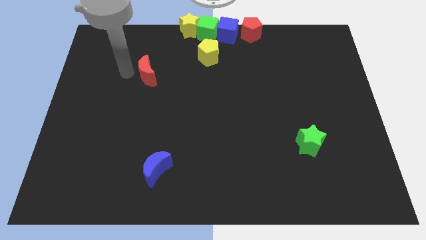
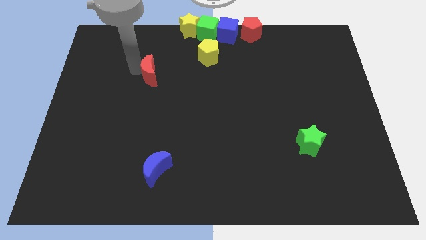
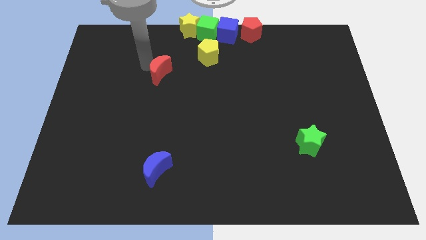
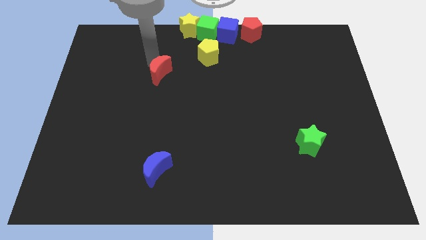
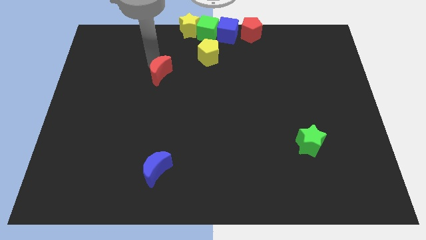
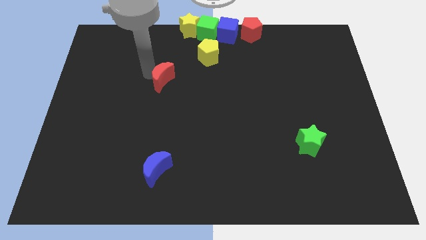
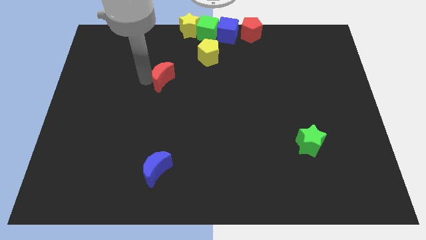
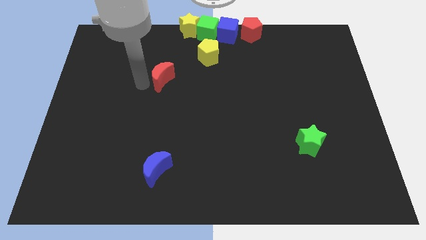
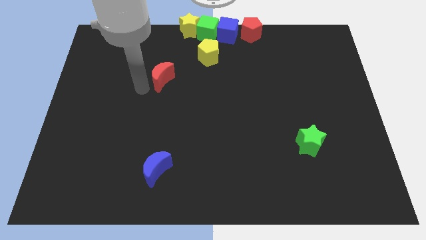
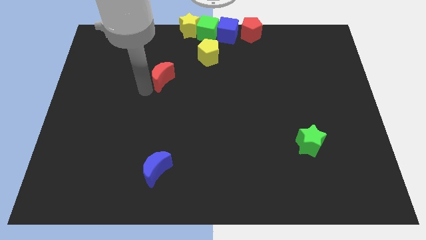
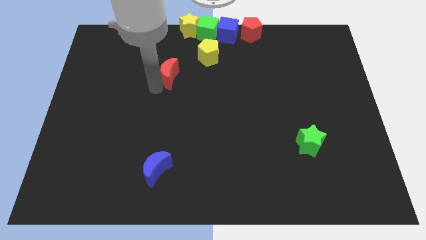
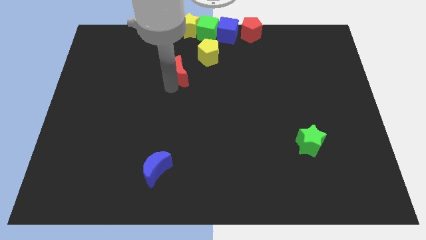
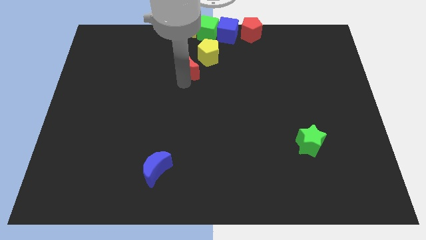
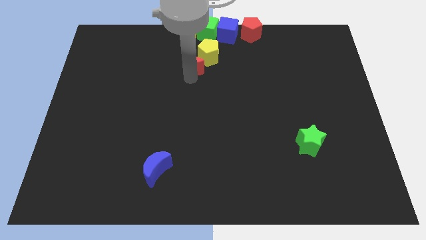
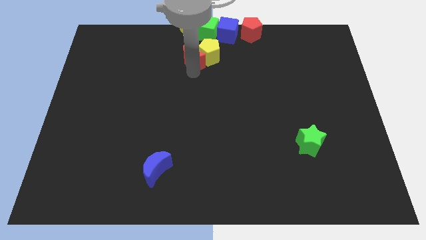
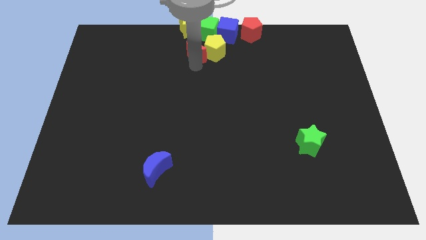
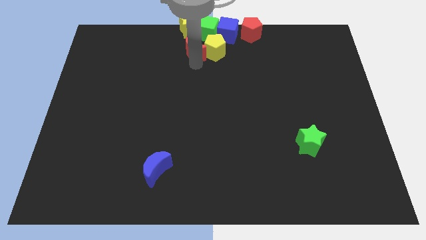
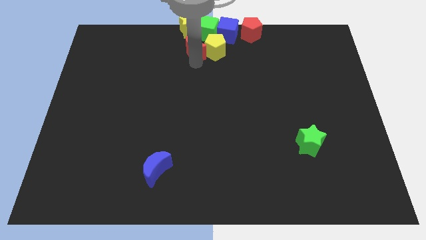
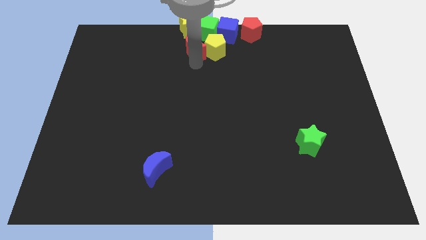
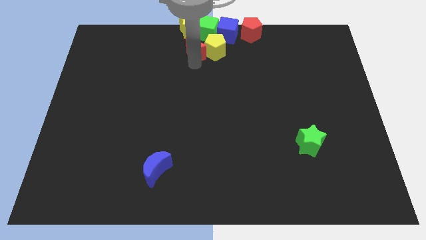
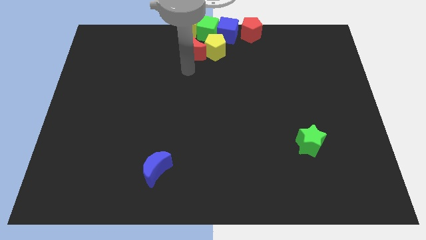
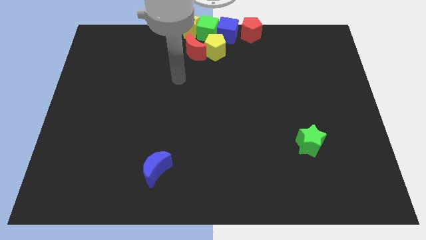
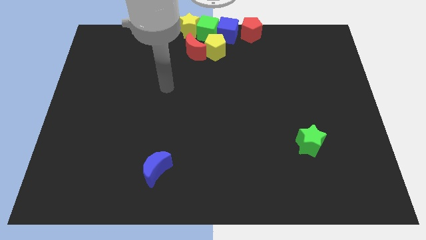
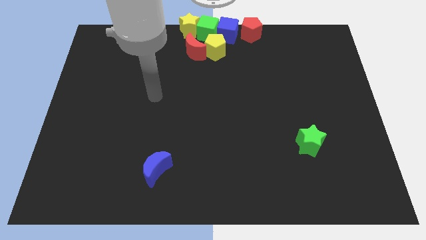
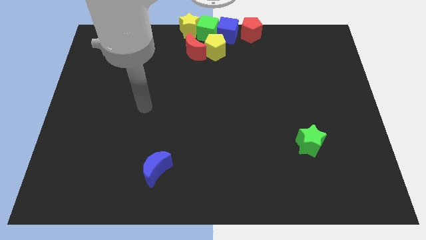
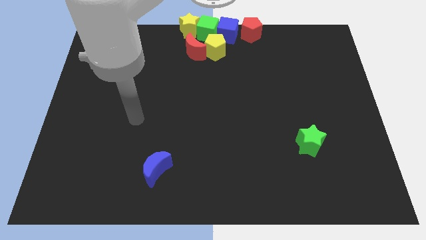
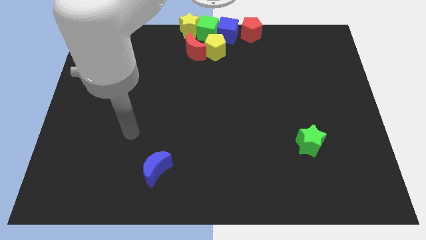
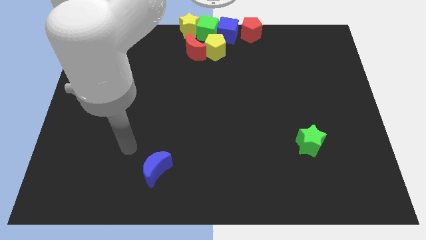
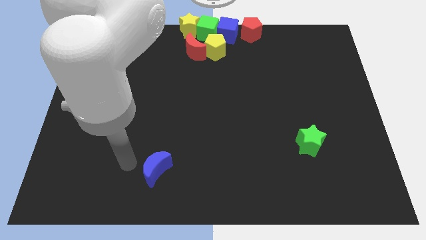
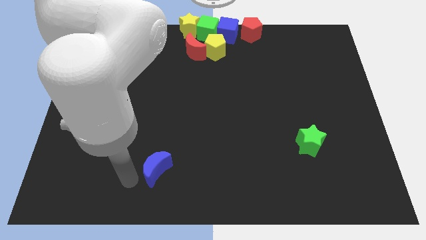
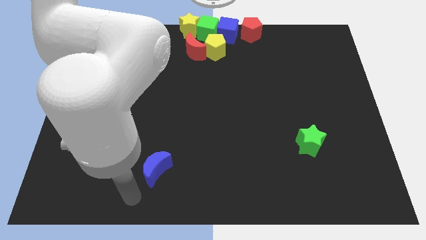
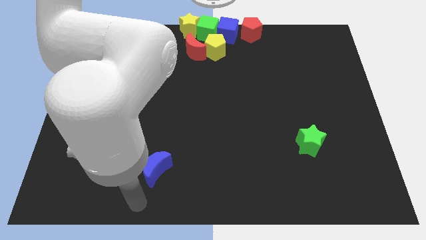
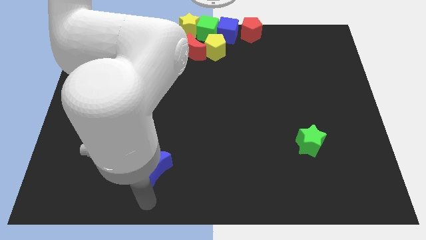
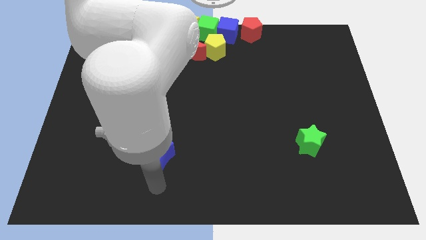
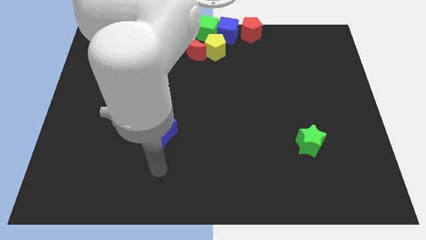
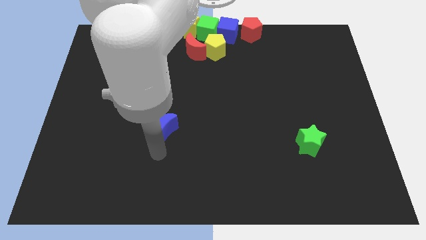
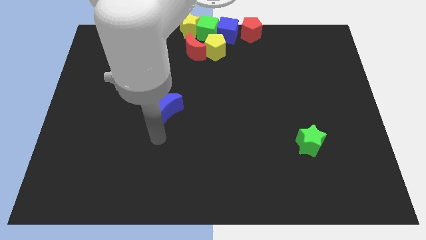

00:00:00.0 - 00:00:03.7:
push blue crescent up

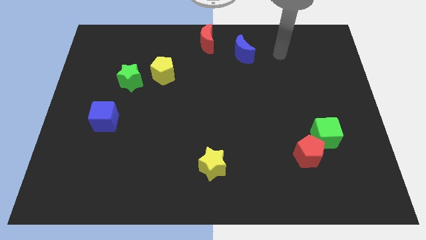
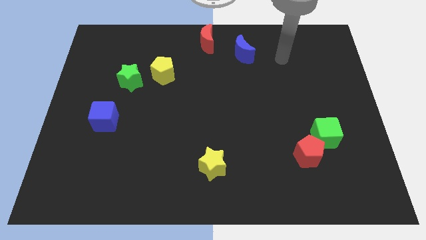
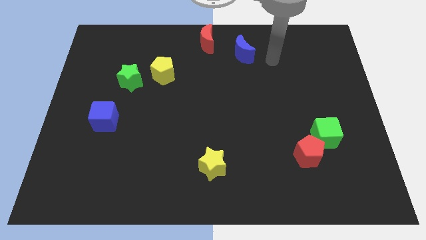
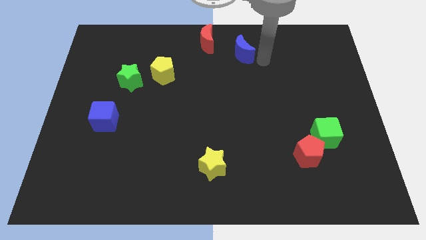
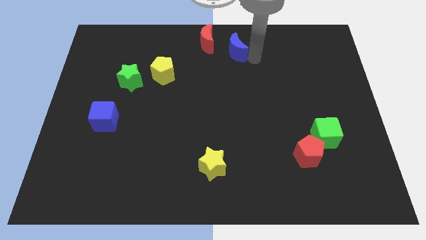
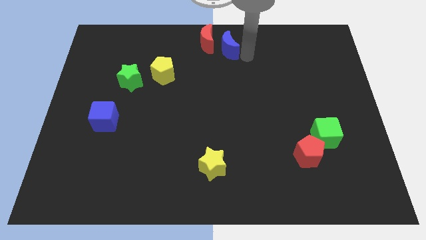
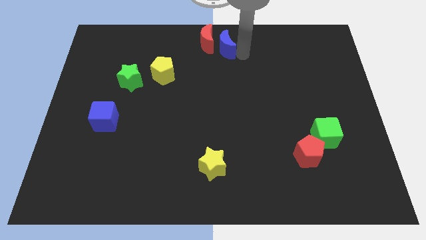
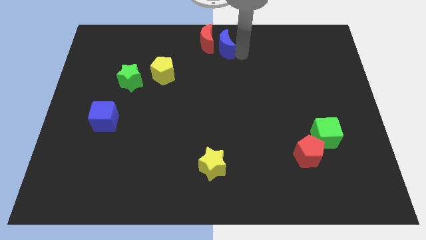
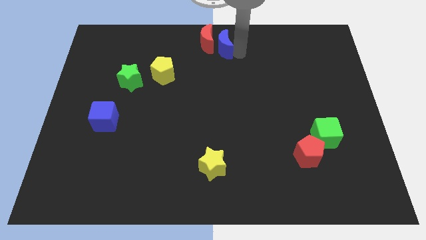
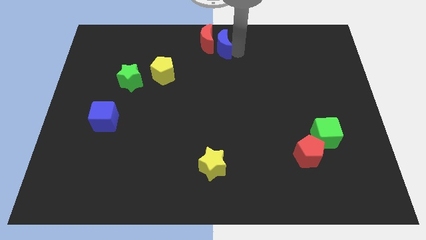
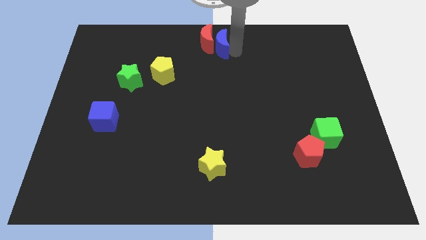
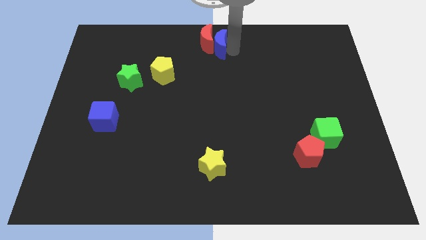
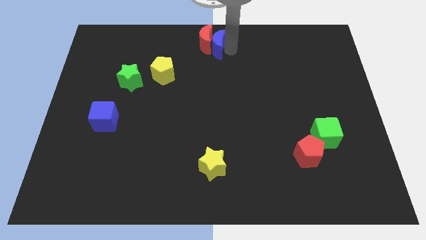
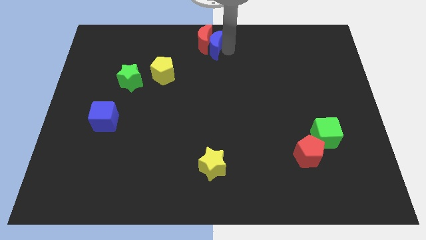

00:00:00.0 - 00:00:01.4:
push the blue moon into the red moon

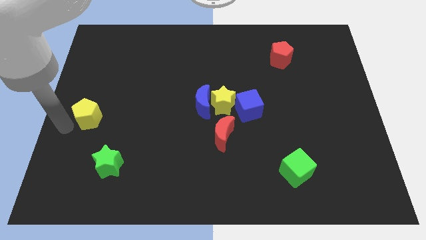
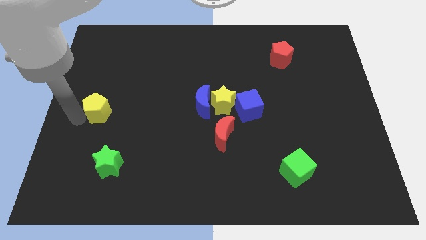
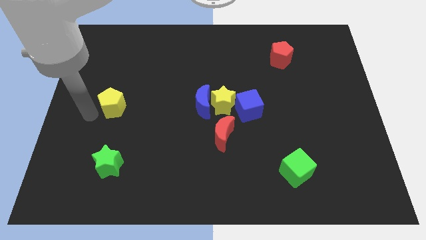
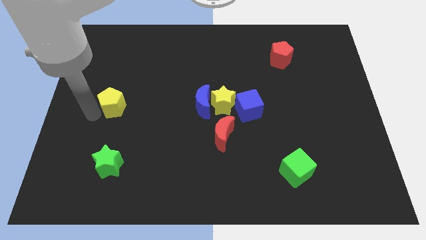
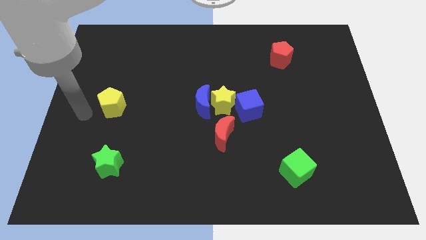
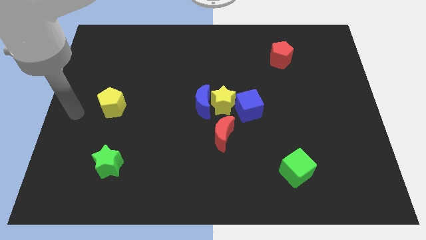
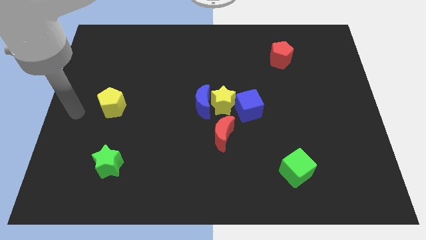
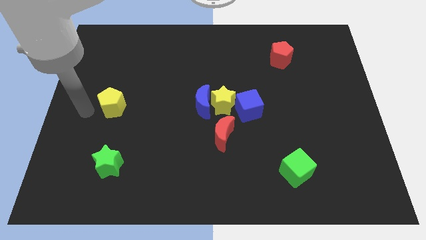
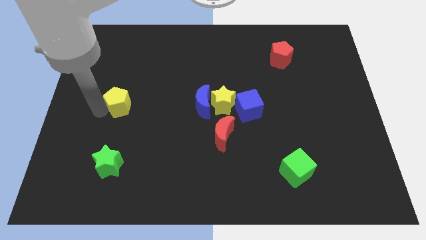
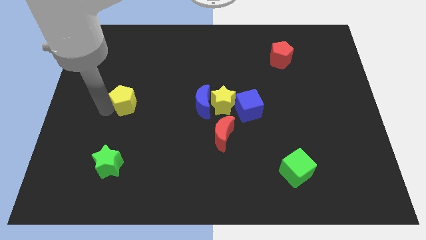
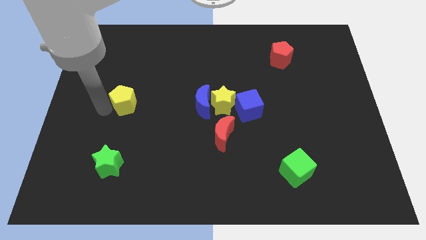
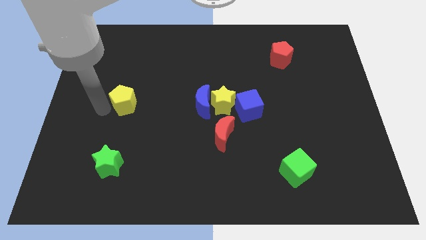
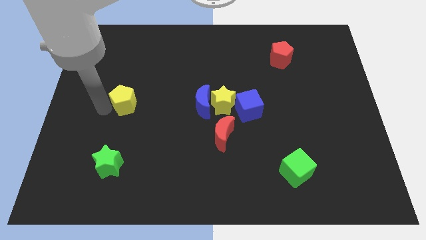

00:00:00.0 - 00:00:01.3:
push the yellow pentagon to the right

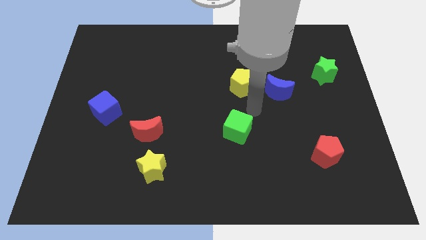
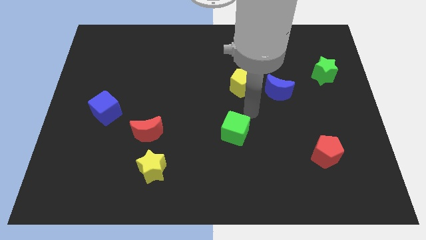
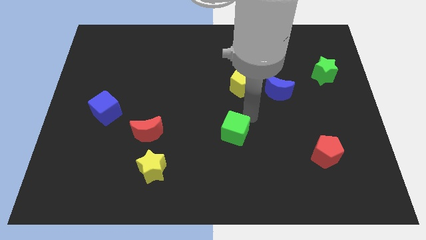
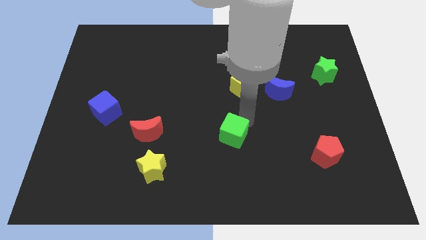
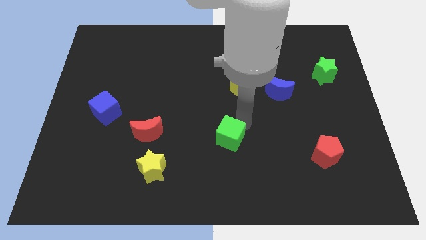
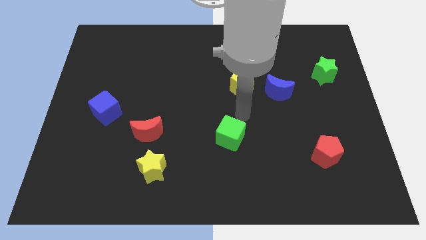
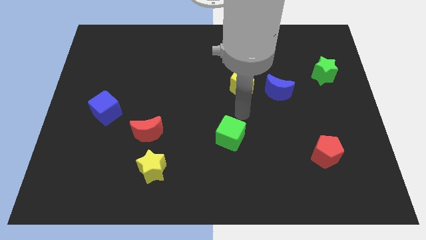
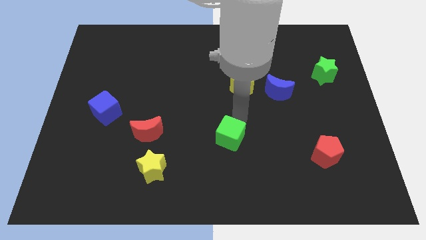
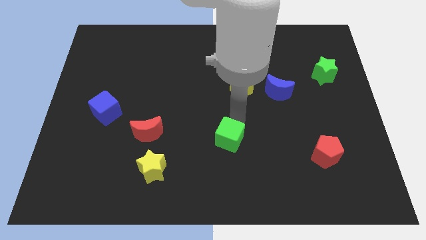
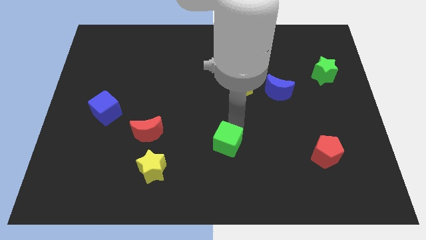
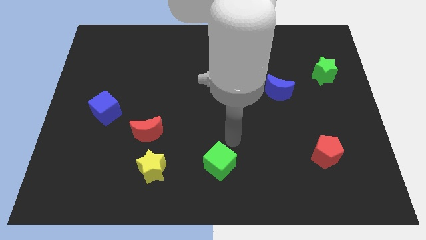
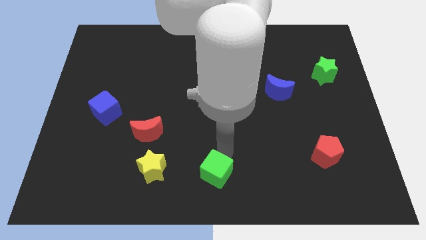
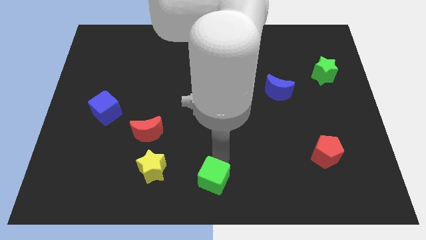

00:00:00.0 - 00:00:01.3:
move the green cube to the right of the yellow star

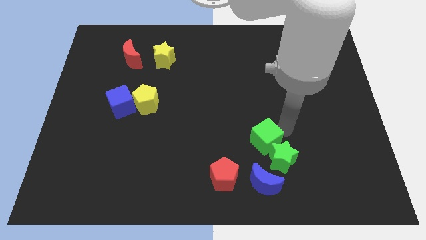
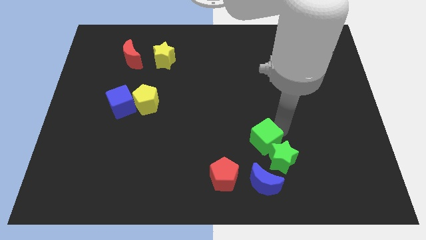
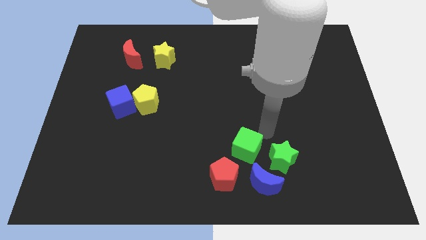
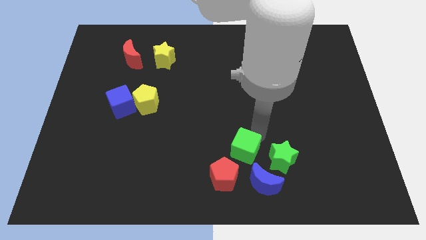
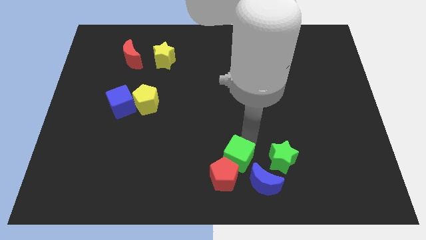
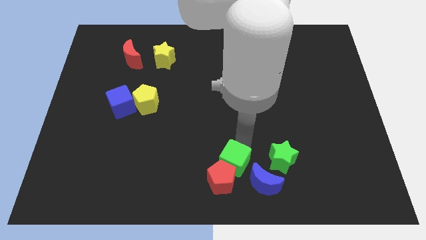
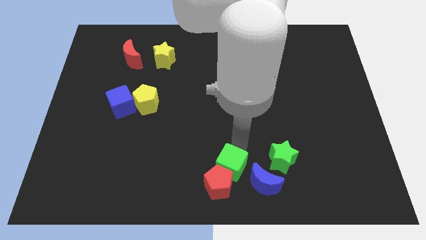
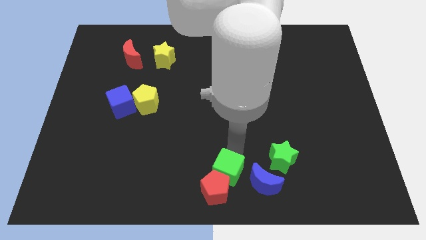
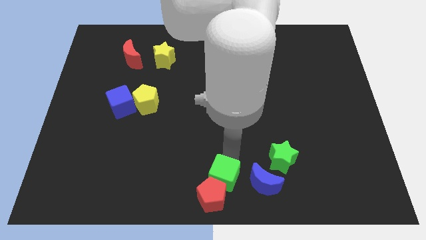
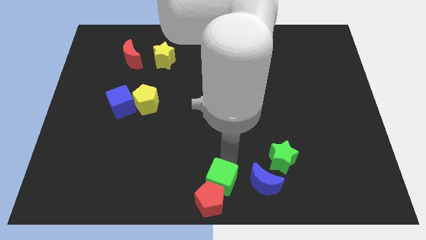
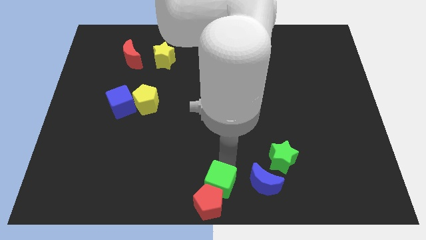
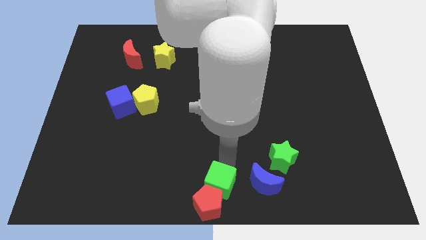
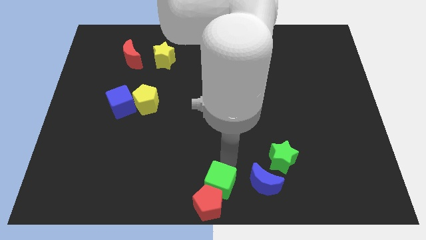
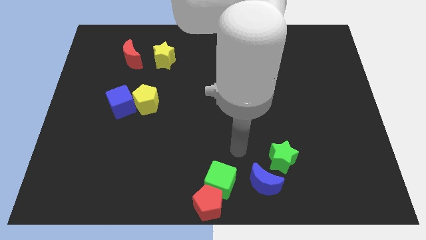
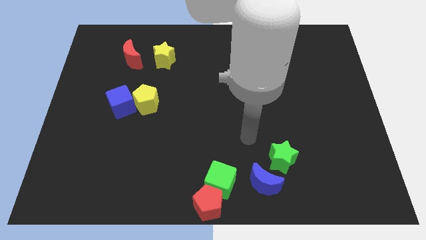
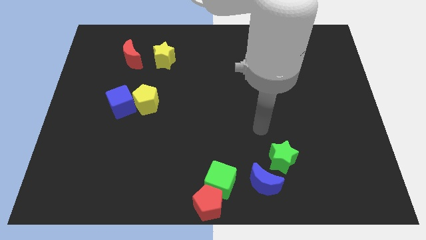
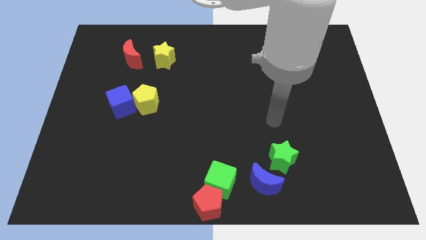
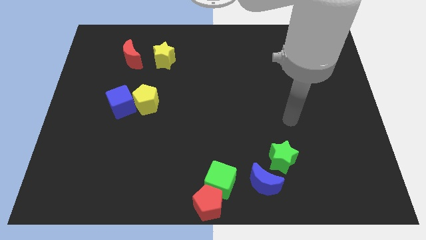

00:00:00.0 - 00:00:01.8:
drag the red pentgaon and green cube to bottom center
